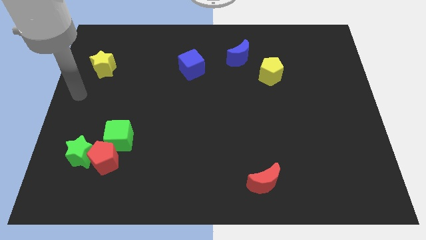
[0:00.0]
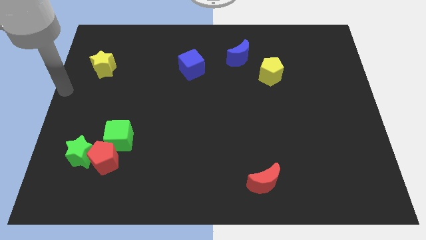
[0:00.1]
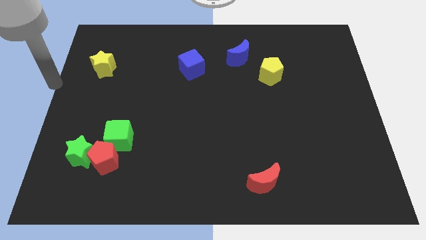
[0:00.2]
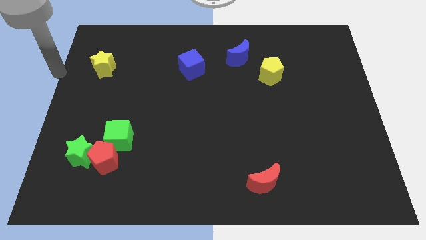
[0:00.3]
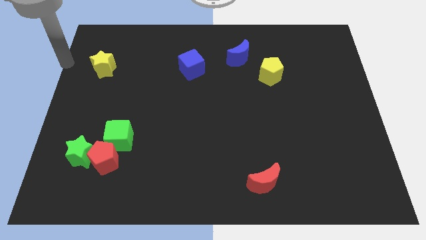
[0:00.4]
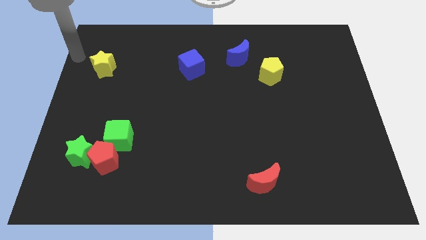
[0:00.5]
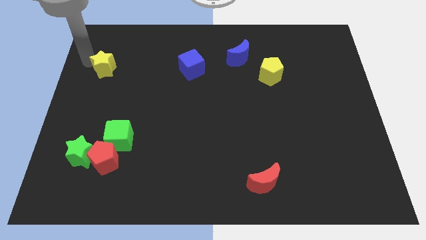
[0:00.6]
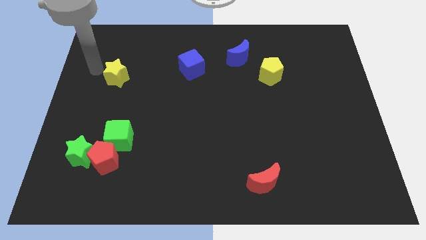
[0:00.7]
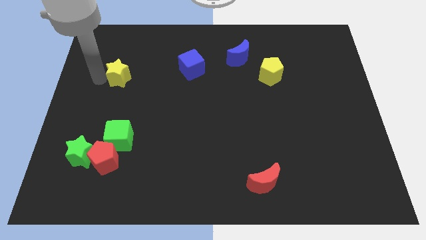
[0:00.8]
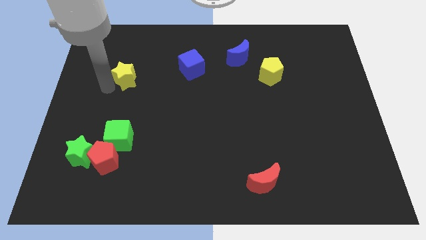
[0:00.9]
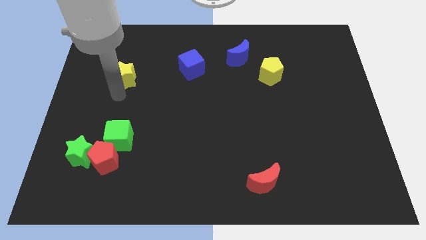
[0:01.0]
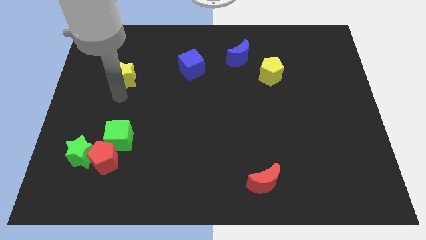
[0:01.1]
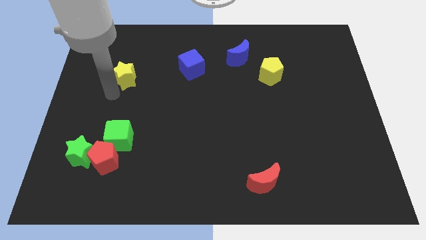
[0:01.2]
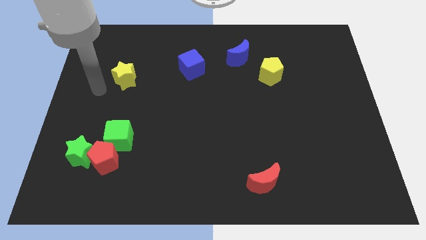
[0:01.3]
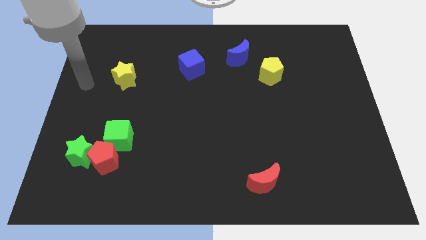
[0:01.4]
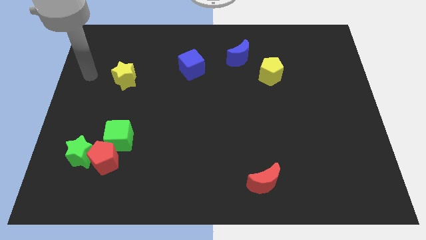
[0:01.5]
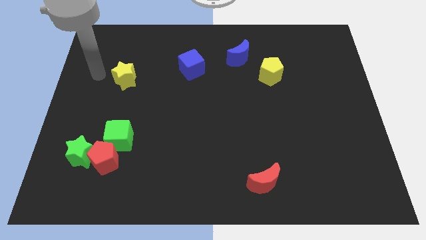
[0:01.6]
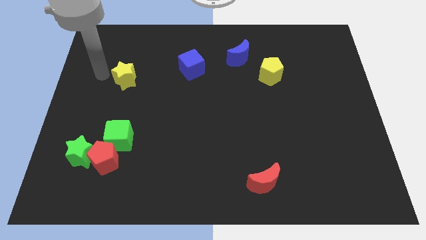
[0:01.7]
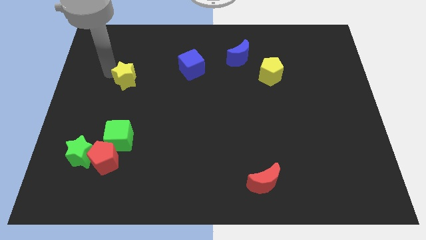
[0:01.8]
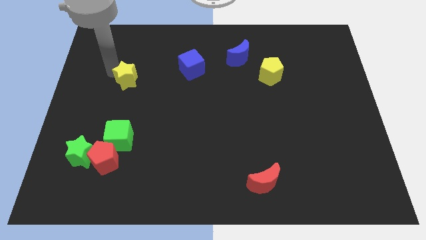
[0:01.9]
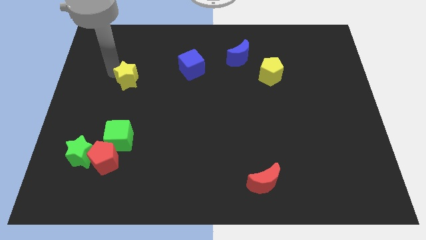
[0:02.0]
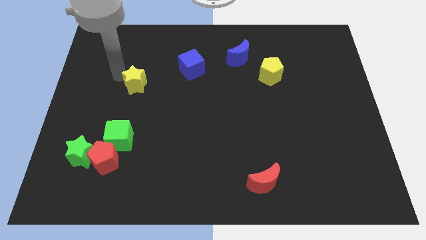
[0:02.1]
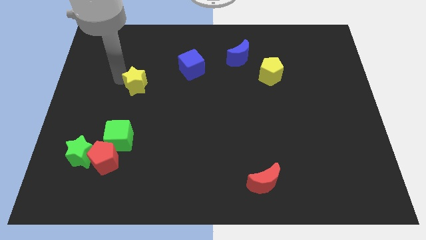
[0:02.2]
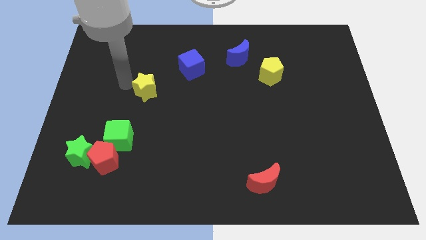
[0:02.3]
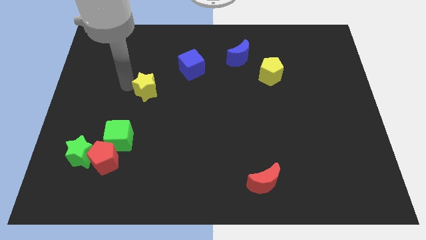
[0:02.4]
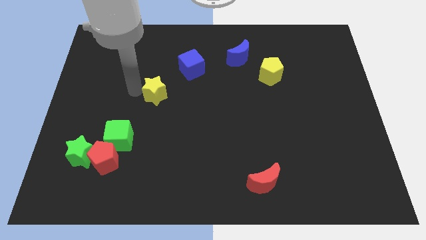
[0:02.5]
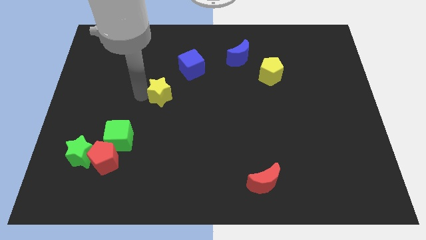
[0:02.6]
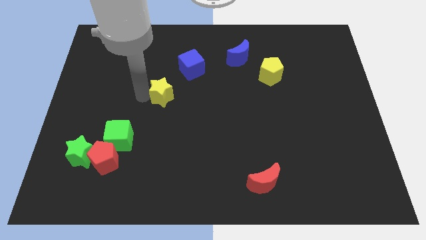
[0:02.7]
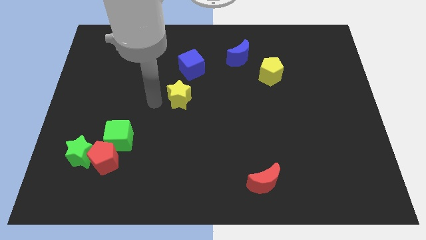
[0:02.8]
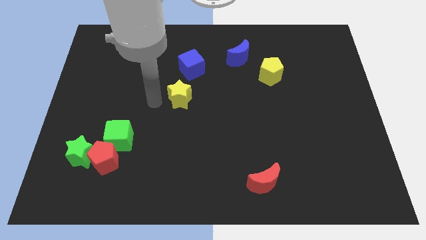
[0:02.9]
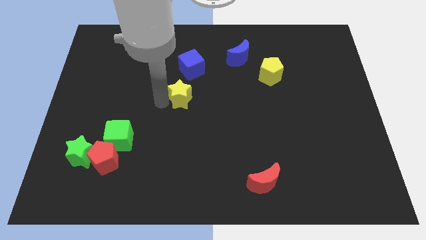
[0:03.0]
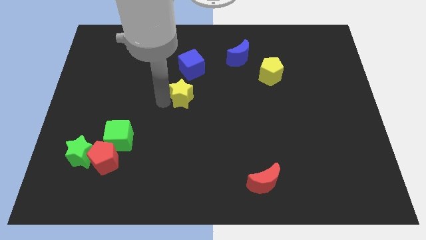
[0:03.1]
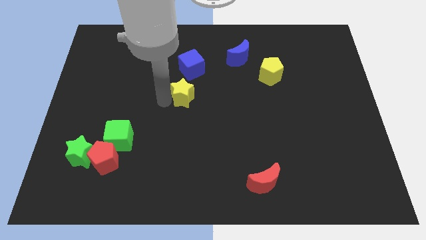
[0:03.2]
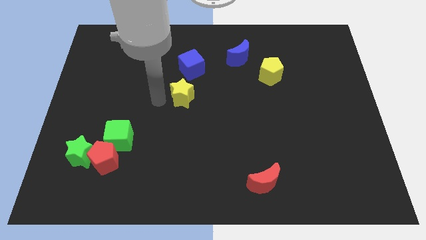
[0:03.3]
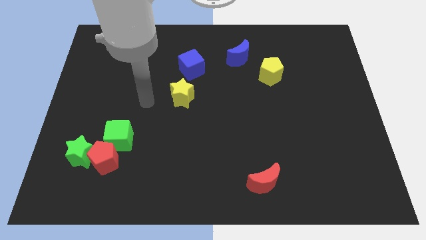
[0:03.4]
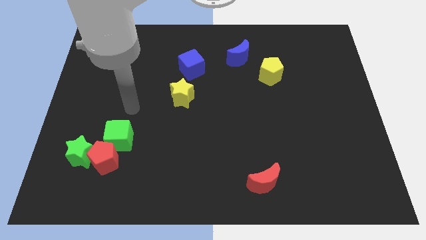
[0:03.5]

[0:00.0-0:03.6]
place the yellow star to the center

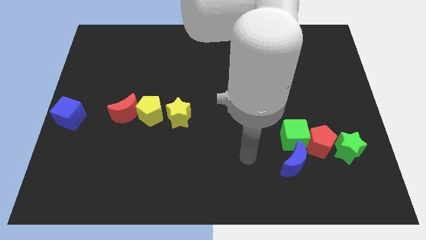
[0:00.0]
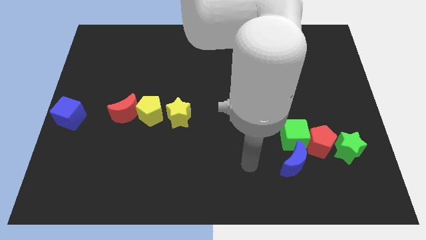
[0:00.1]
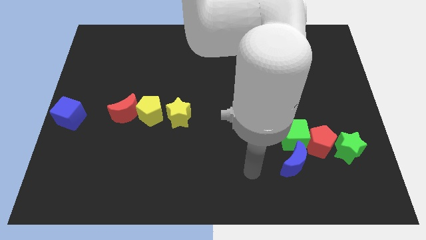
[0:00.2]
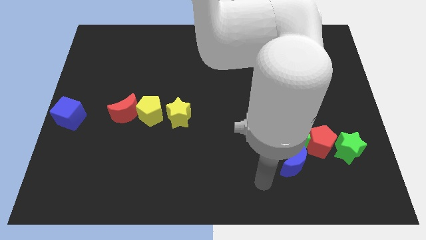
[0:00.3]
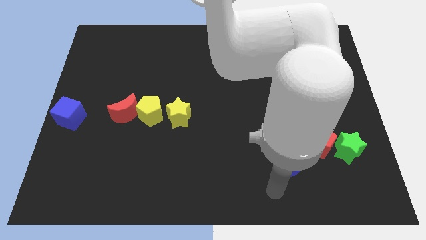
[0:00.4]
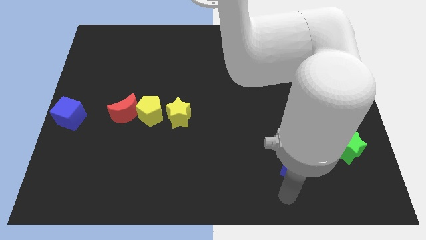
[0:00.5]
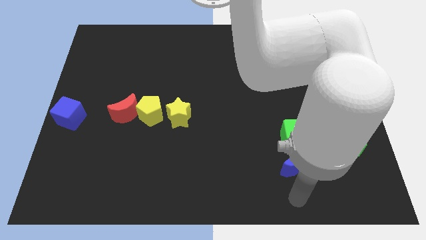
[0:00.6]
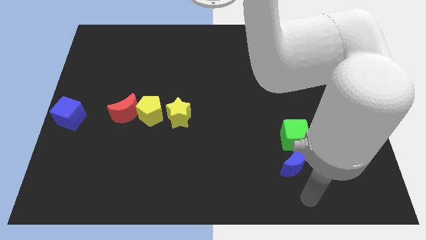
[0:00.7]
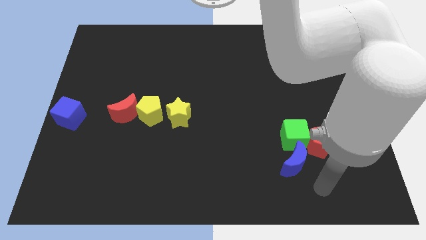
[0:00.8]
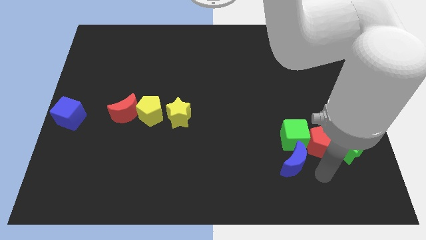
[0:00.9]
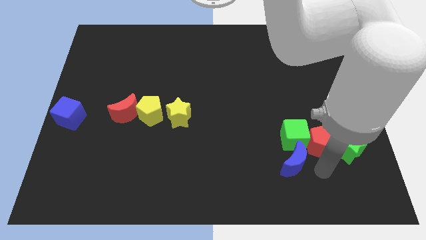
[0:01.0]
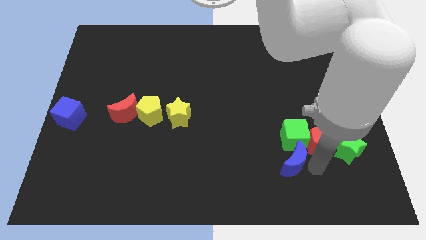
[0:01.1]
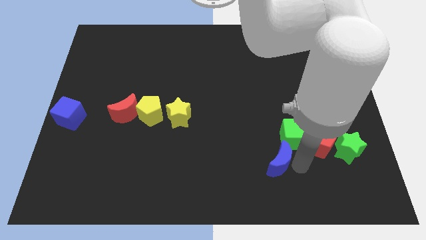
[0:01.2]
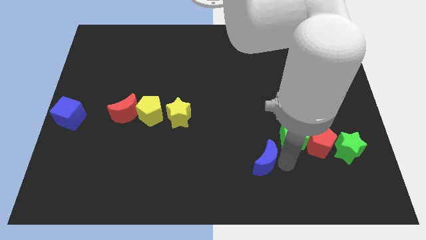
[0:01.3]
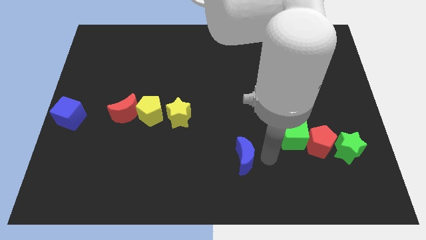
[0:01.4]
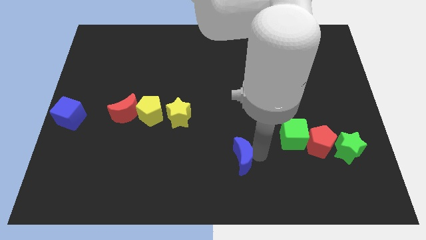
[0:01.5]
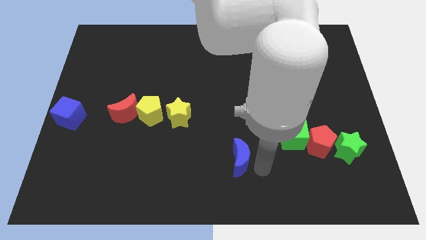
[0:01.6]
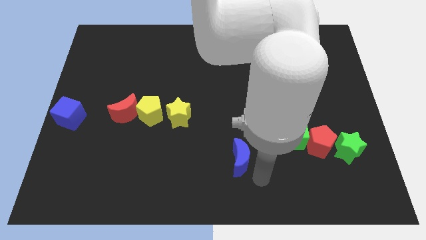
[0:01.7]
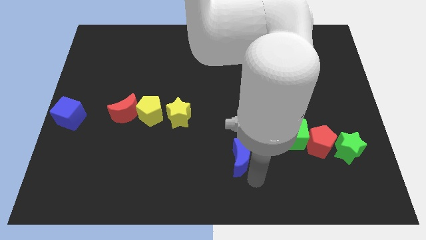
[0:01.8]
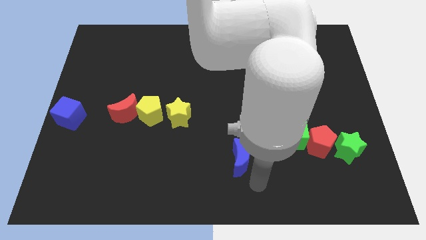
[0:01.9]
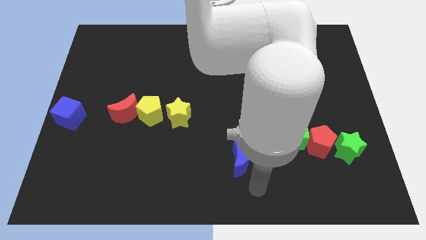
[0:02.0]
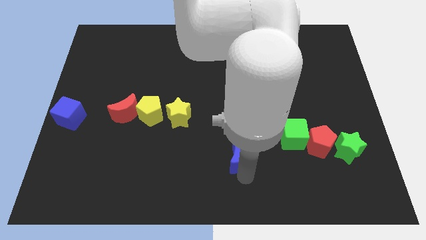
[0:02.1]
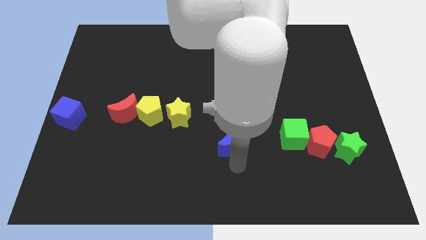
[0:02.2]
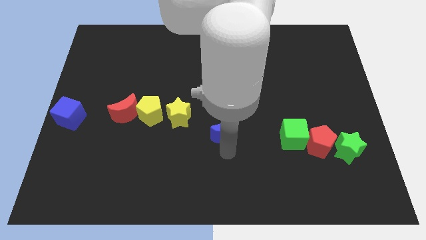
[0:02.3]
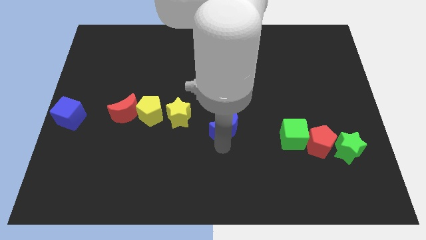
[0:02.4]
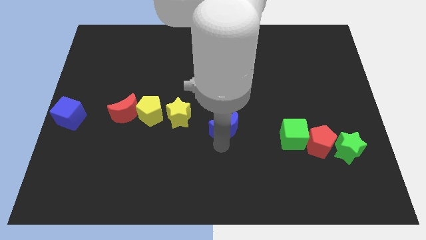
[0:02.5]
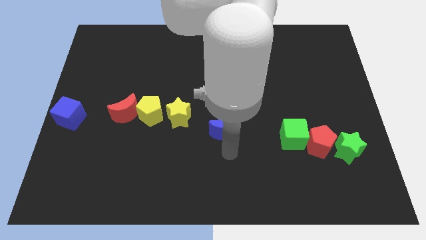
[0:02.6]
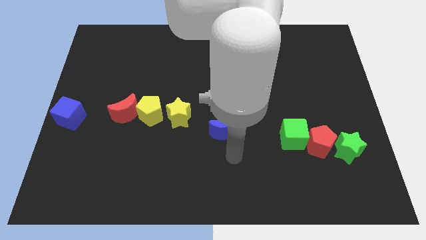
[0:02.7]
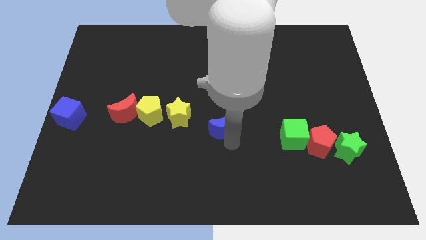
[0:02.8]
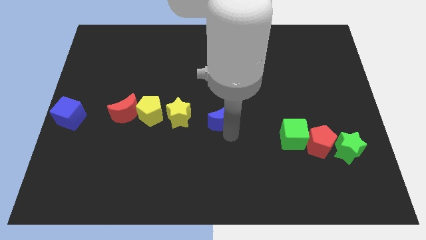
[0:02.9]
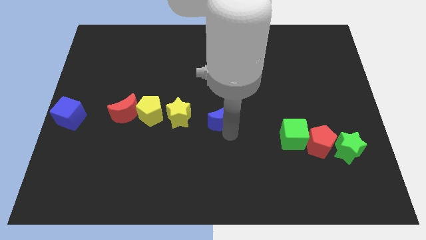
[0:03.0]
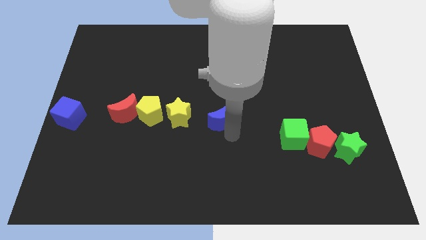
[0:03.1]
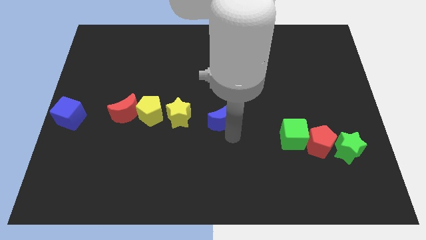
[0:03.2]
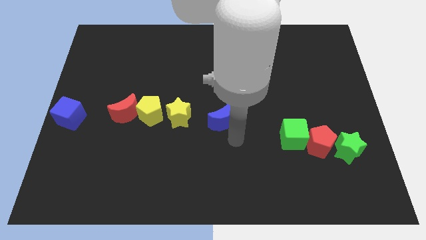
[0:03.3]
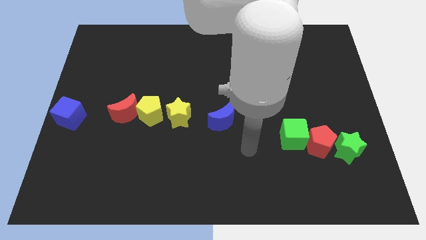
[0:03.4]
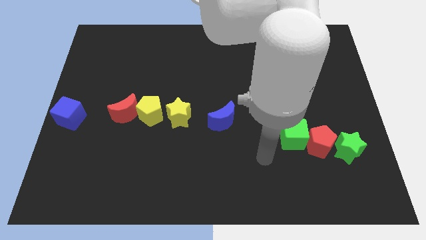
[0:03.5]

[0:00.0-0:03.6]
place the blue moon to the right of the yellow star

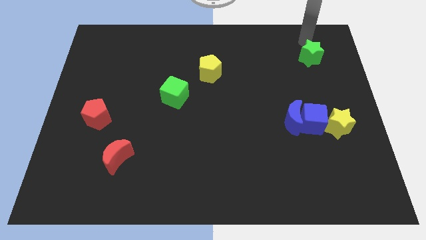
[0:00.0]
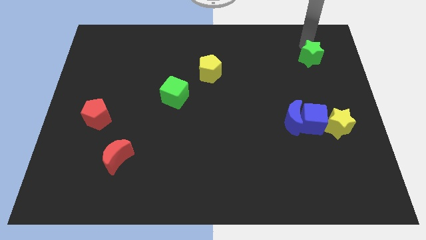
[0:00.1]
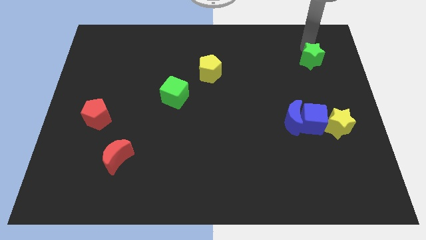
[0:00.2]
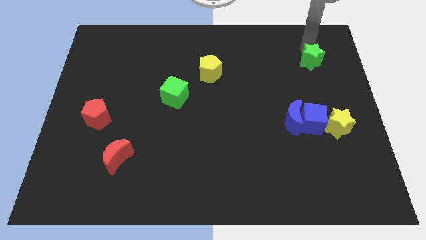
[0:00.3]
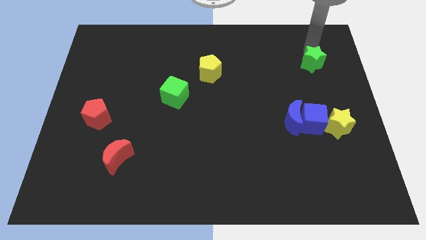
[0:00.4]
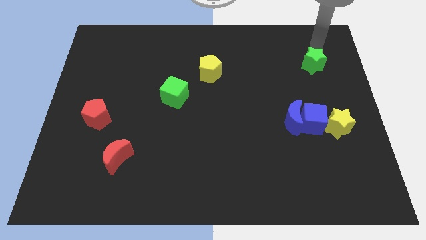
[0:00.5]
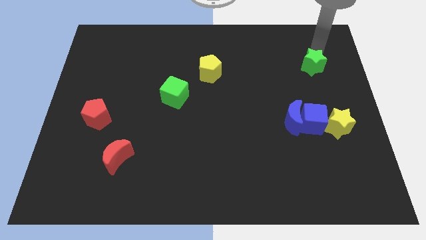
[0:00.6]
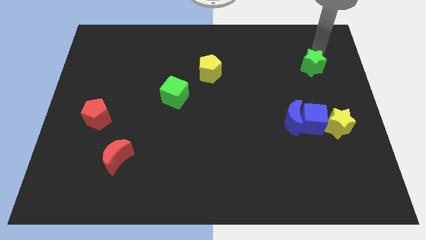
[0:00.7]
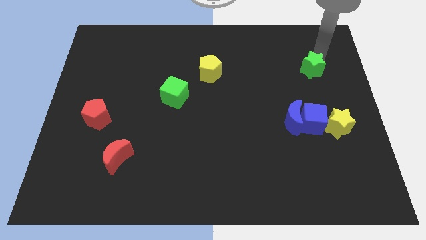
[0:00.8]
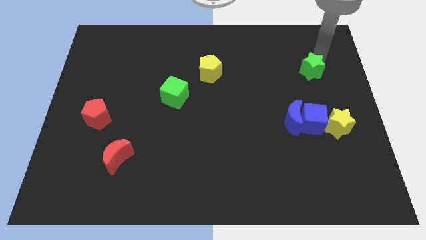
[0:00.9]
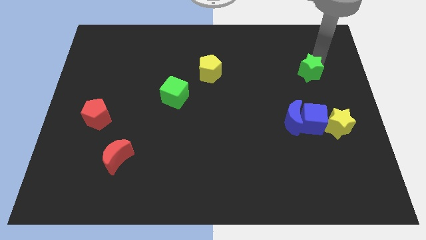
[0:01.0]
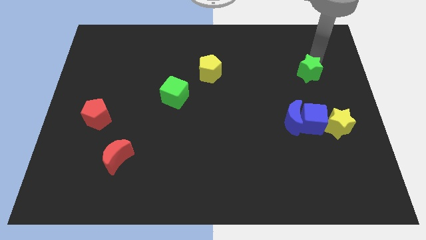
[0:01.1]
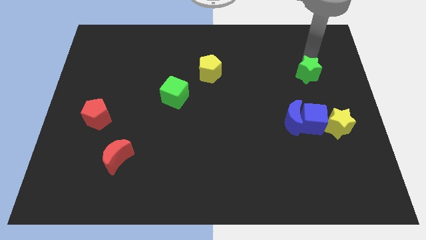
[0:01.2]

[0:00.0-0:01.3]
push the green star towards the blue cube

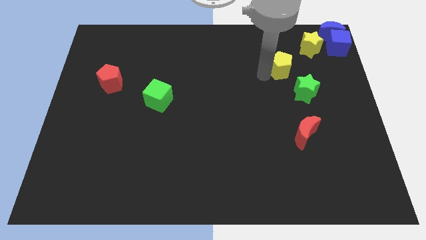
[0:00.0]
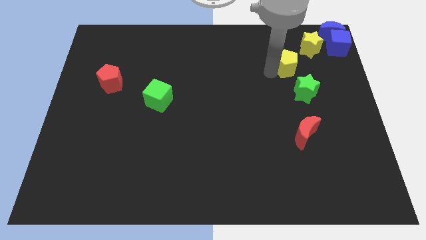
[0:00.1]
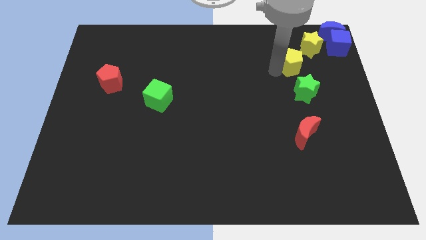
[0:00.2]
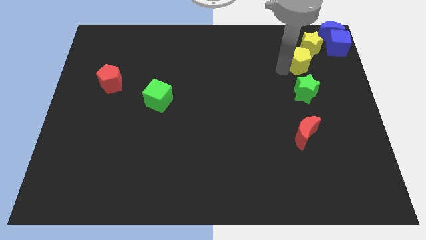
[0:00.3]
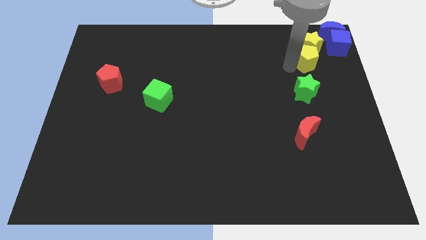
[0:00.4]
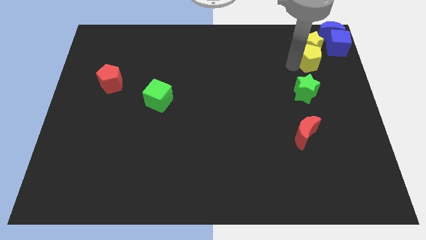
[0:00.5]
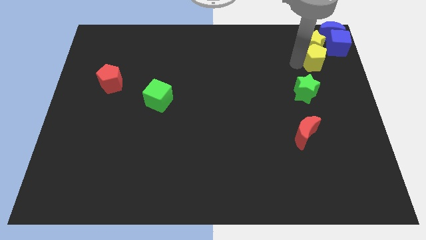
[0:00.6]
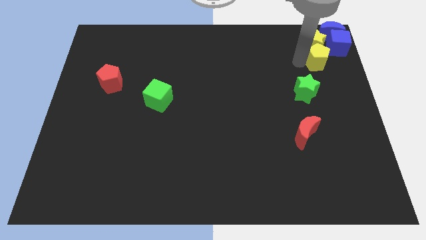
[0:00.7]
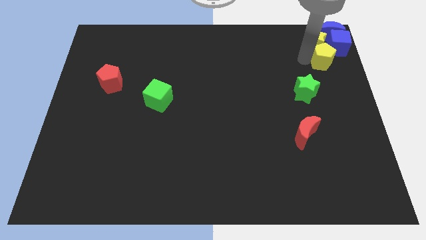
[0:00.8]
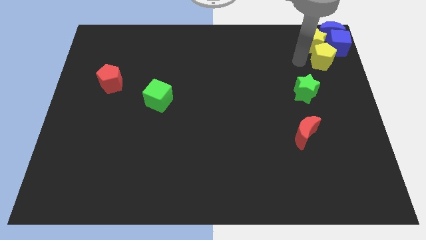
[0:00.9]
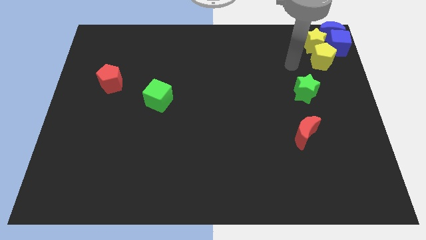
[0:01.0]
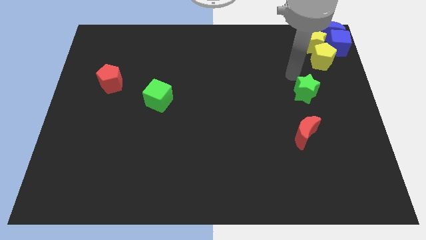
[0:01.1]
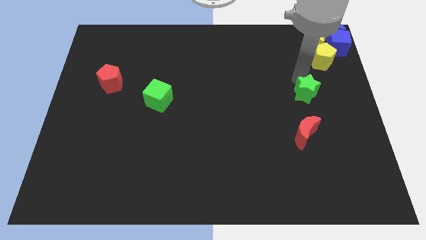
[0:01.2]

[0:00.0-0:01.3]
place yellow pentagonto the bottom side of the yellow star
